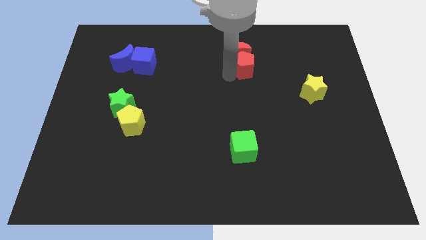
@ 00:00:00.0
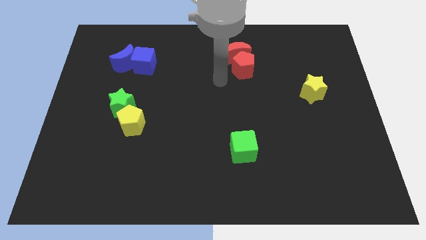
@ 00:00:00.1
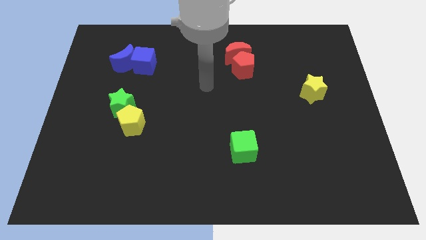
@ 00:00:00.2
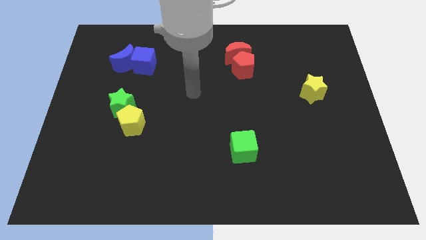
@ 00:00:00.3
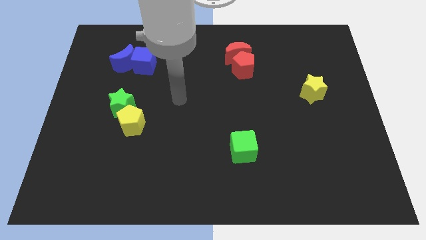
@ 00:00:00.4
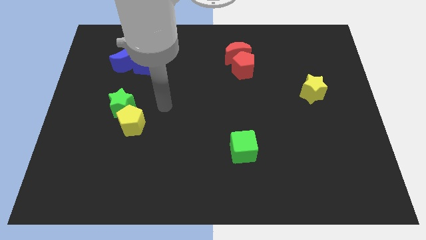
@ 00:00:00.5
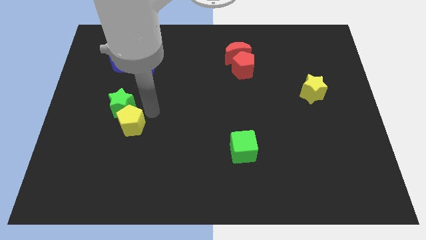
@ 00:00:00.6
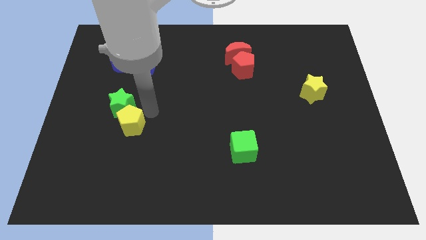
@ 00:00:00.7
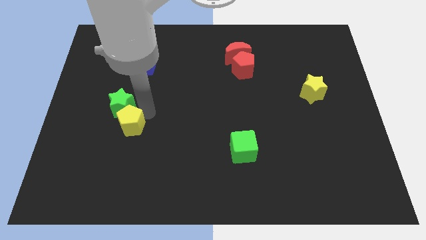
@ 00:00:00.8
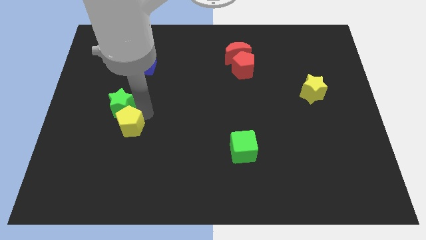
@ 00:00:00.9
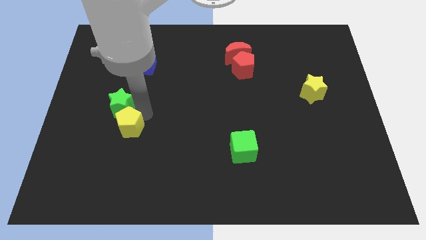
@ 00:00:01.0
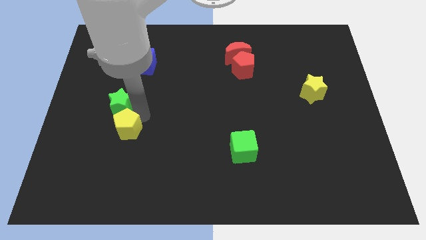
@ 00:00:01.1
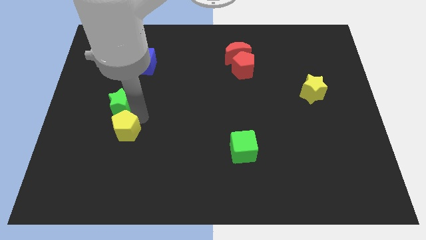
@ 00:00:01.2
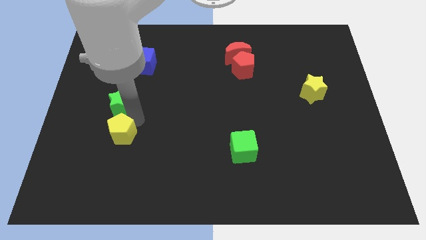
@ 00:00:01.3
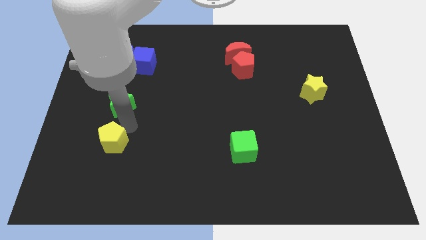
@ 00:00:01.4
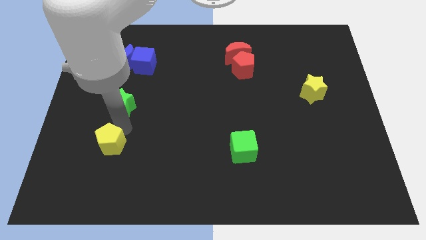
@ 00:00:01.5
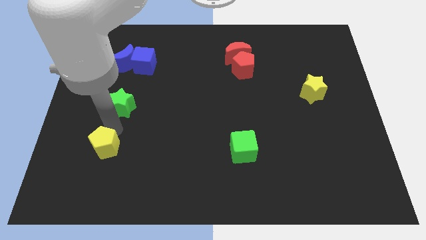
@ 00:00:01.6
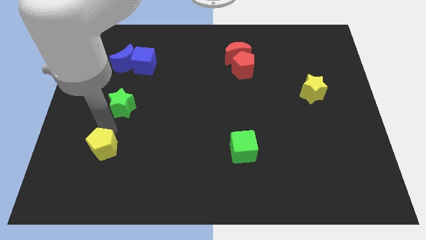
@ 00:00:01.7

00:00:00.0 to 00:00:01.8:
push the yellow pentagon slightly to the bottom

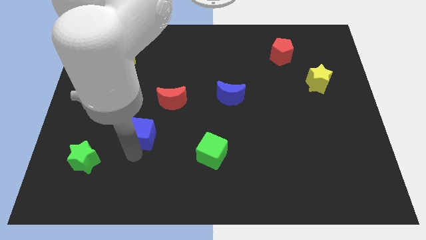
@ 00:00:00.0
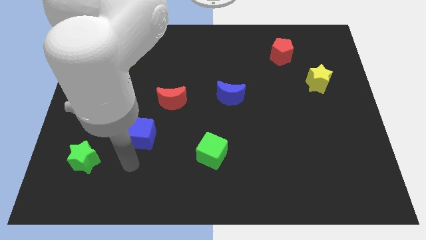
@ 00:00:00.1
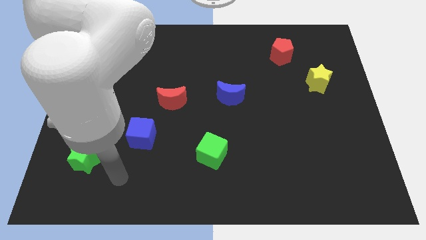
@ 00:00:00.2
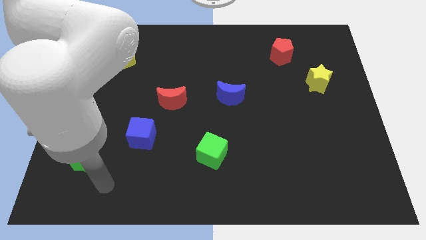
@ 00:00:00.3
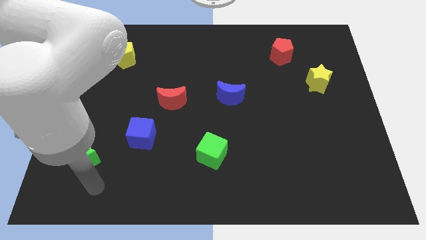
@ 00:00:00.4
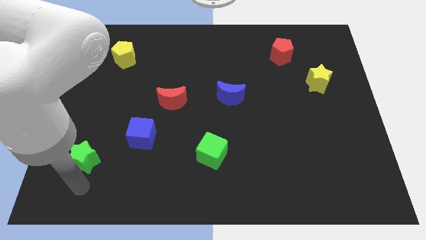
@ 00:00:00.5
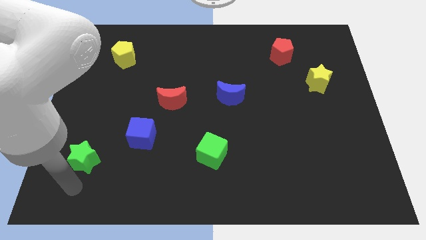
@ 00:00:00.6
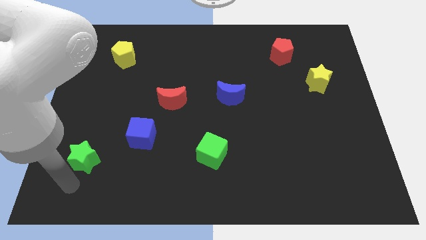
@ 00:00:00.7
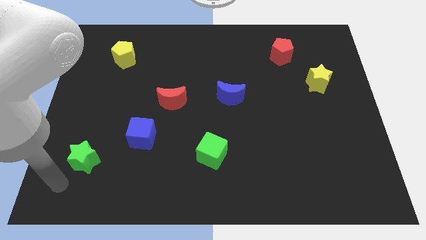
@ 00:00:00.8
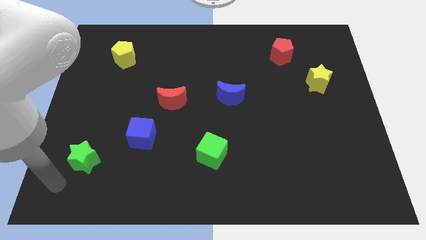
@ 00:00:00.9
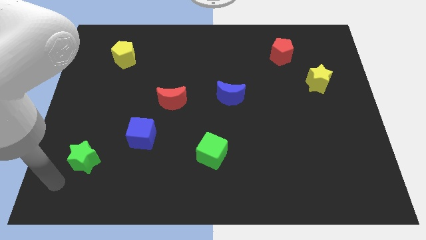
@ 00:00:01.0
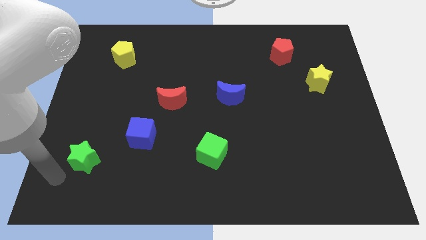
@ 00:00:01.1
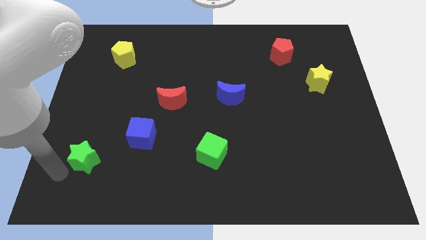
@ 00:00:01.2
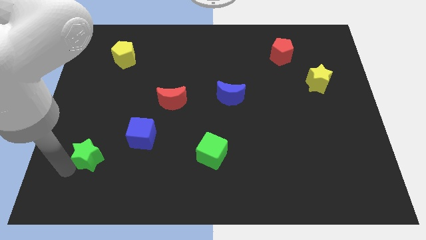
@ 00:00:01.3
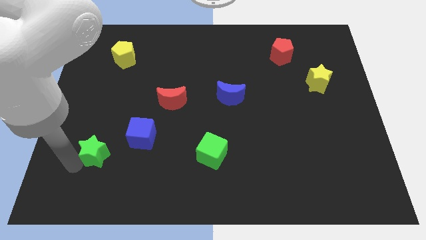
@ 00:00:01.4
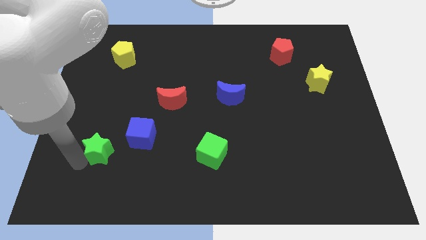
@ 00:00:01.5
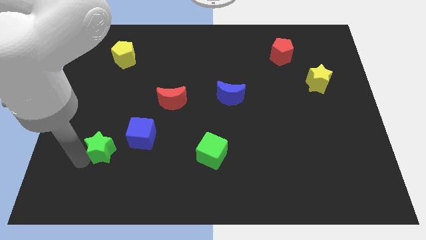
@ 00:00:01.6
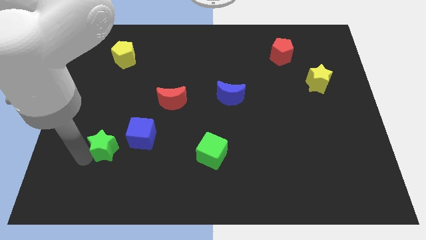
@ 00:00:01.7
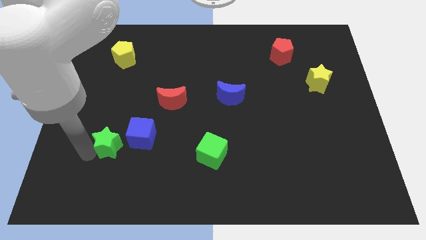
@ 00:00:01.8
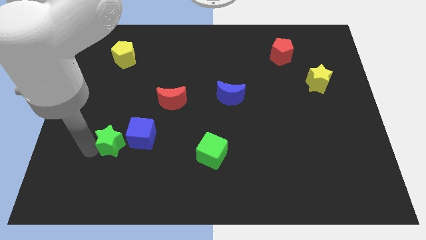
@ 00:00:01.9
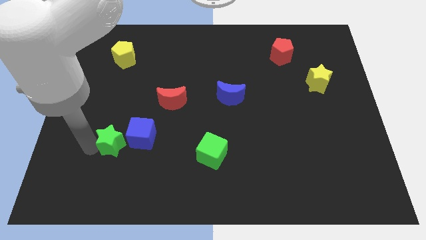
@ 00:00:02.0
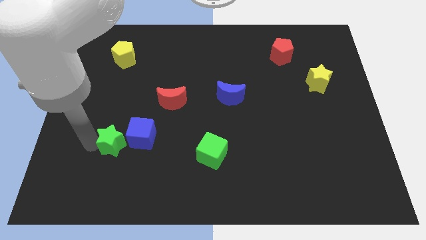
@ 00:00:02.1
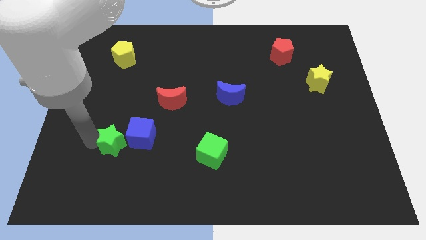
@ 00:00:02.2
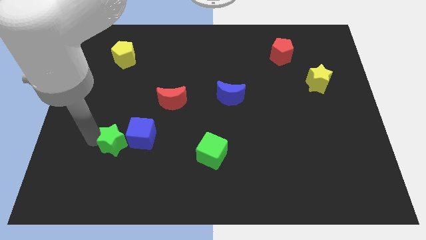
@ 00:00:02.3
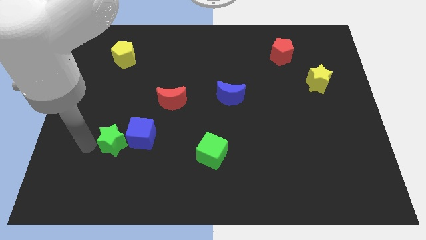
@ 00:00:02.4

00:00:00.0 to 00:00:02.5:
move the green star vertically below the yellow pentagon

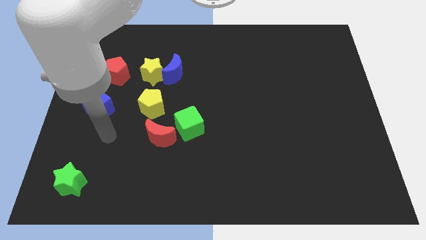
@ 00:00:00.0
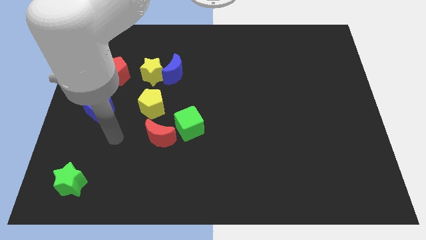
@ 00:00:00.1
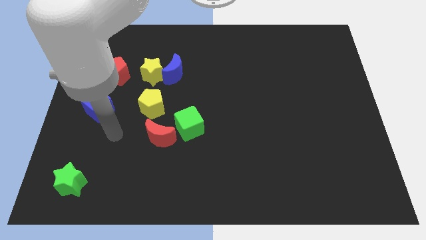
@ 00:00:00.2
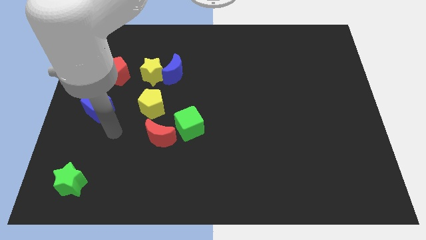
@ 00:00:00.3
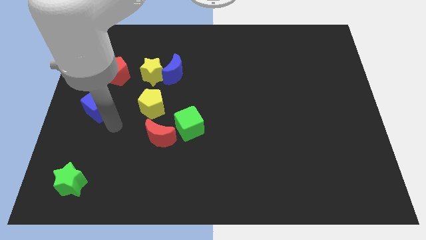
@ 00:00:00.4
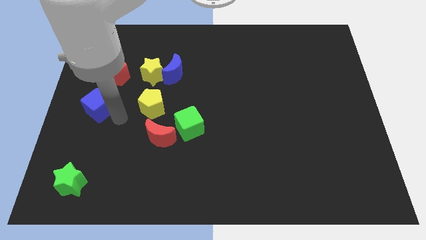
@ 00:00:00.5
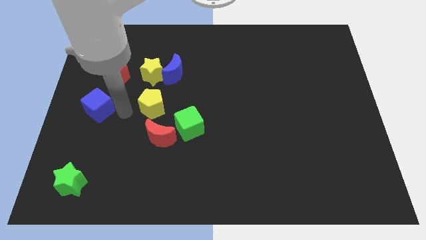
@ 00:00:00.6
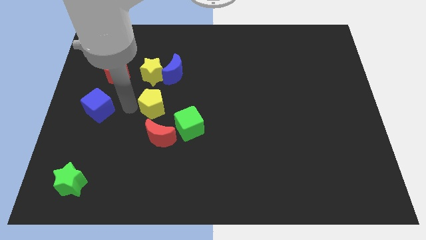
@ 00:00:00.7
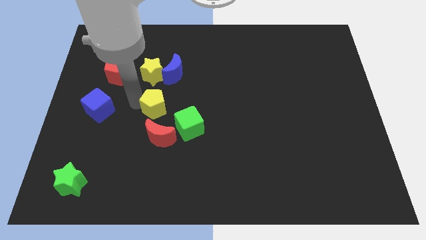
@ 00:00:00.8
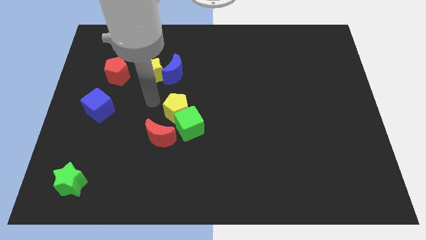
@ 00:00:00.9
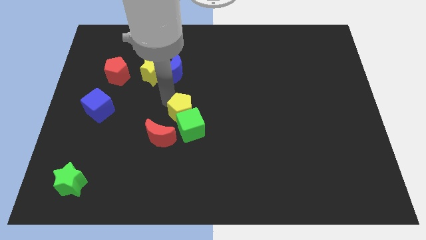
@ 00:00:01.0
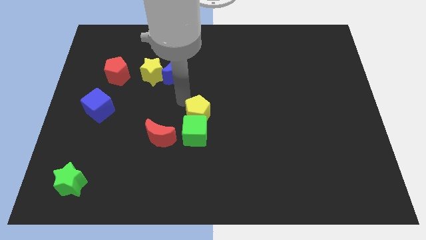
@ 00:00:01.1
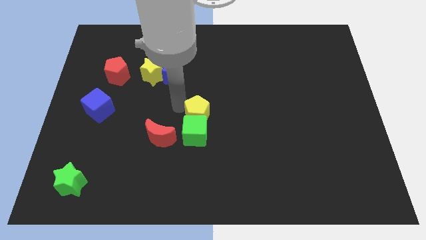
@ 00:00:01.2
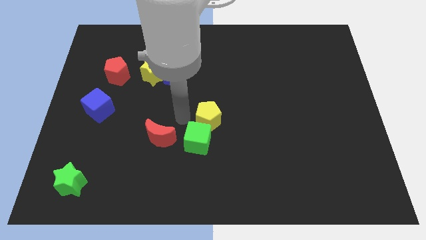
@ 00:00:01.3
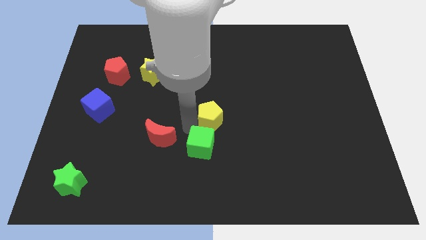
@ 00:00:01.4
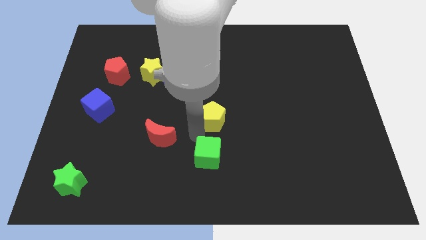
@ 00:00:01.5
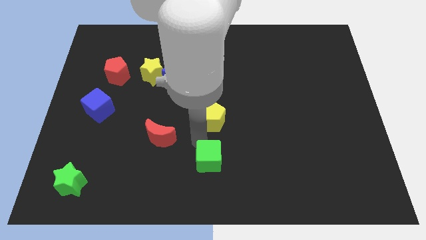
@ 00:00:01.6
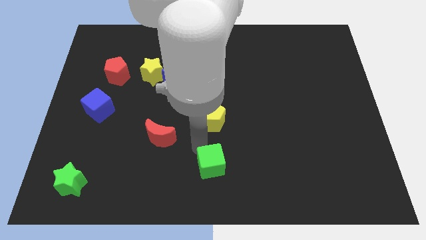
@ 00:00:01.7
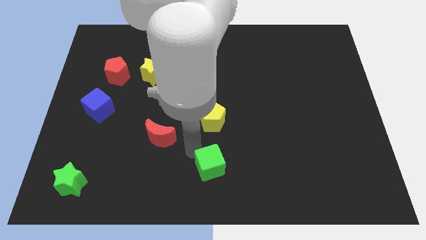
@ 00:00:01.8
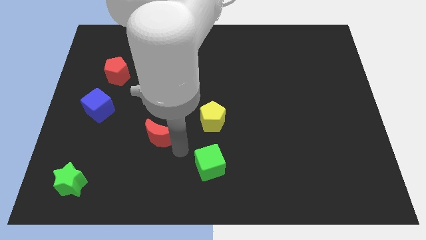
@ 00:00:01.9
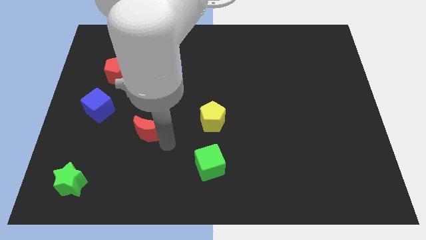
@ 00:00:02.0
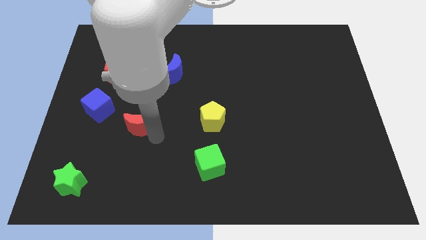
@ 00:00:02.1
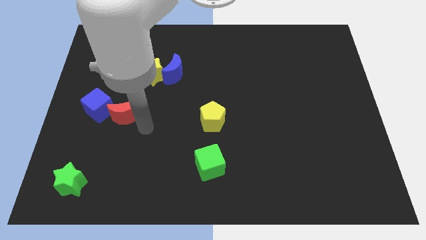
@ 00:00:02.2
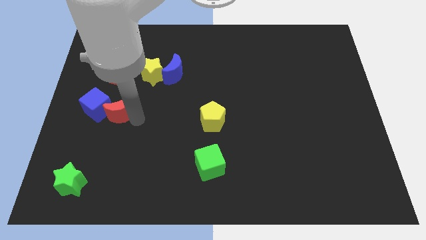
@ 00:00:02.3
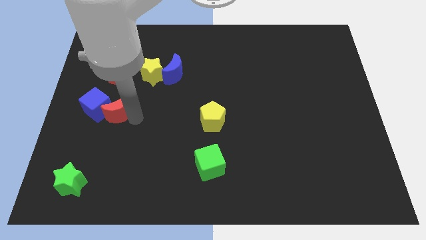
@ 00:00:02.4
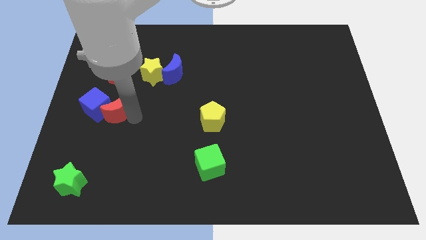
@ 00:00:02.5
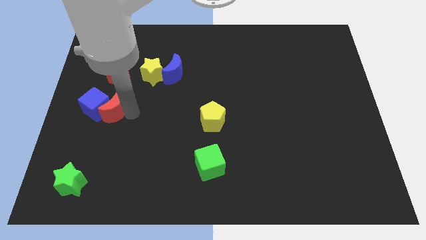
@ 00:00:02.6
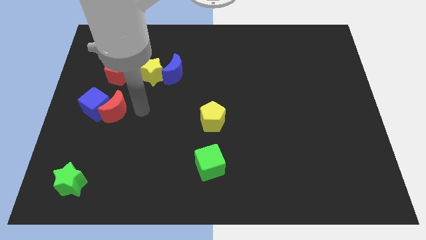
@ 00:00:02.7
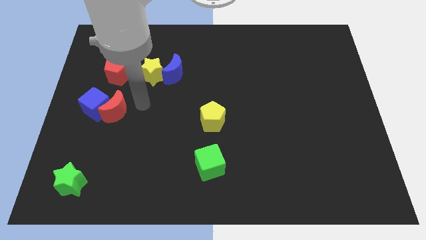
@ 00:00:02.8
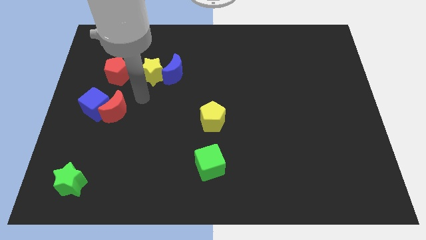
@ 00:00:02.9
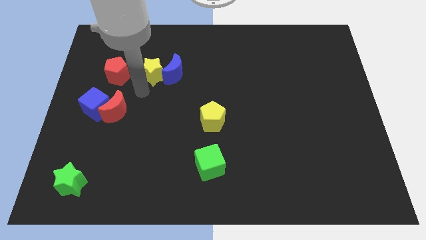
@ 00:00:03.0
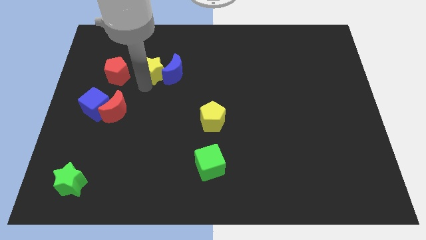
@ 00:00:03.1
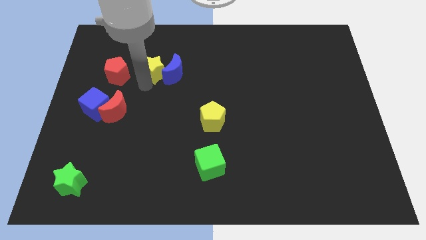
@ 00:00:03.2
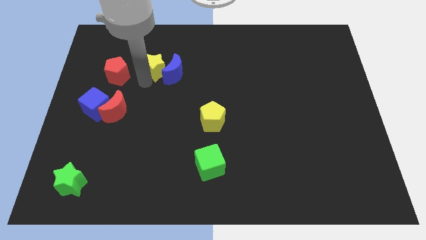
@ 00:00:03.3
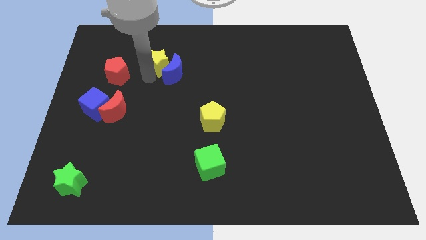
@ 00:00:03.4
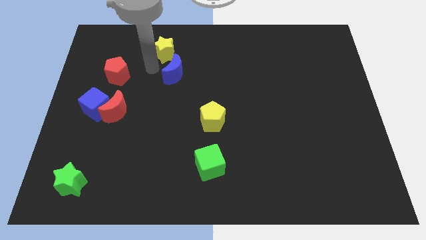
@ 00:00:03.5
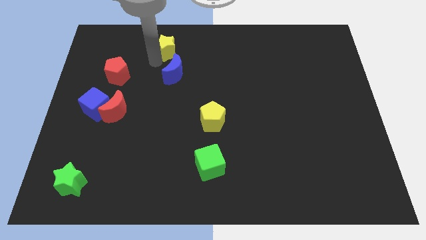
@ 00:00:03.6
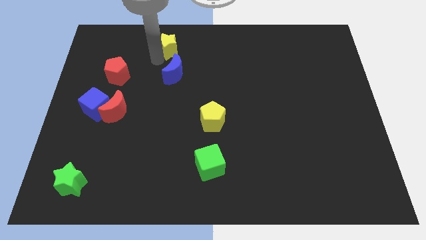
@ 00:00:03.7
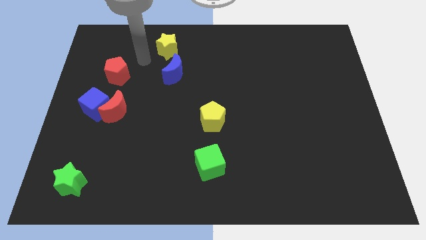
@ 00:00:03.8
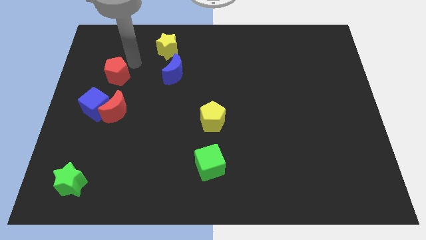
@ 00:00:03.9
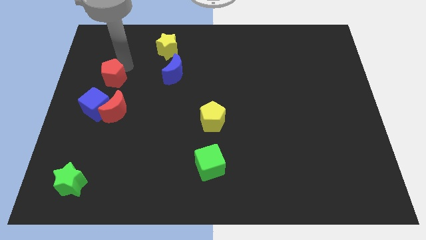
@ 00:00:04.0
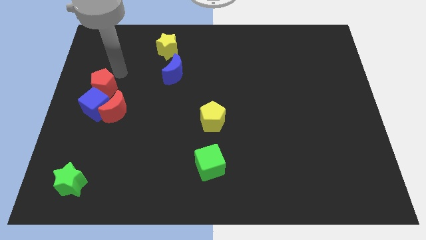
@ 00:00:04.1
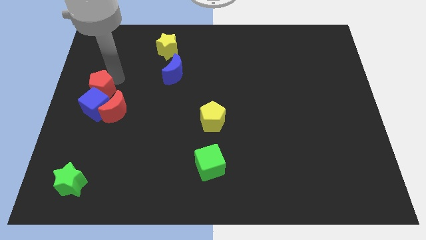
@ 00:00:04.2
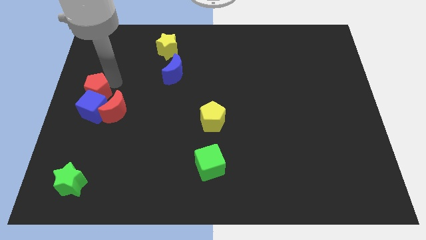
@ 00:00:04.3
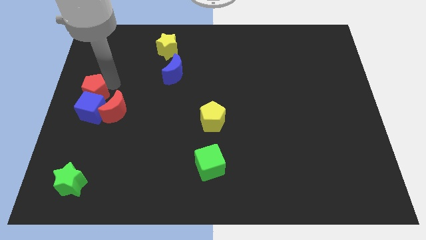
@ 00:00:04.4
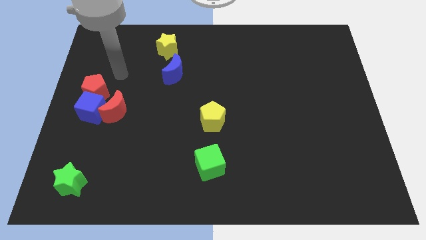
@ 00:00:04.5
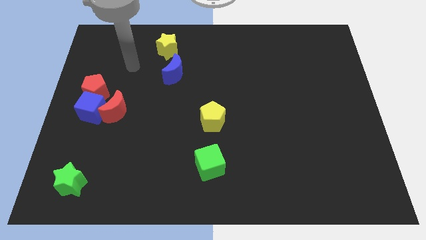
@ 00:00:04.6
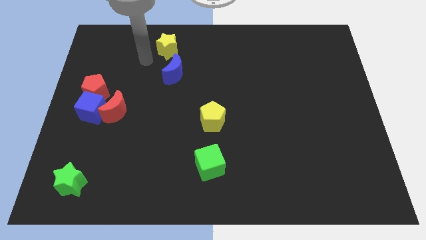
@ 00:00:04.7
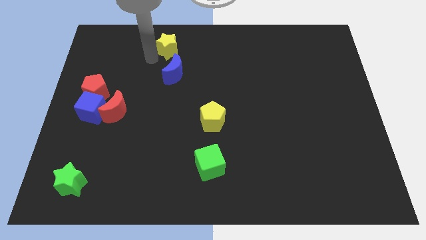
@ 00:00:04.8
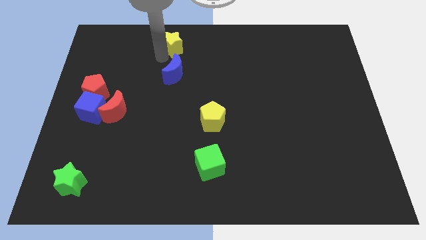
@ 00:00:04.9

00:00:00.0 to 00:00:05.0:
separate the group of blocks from each other
